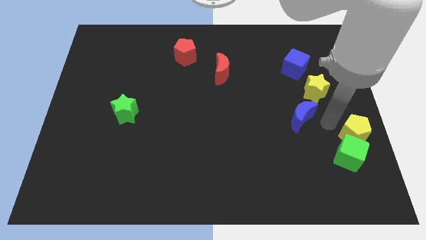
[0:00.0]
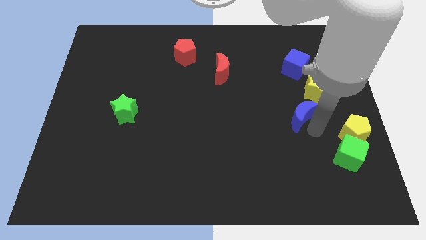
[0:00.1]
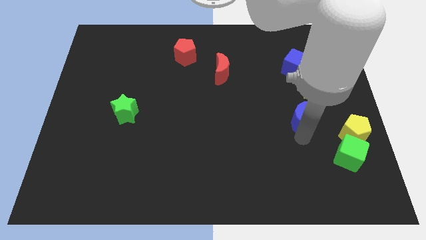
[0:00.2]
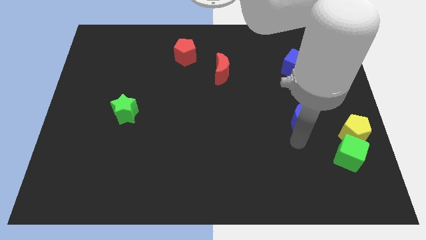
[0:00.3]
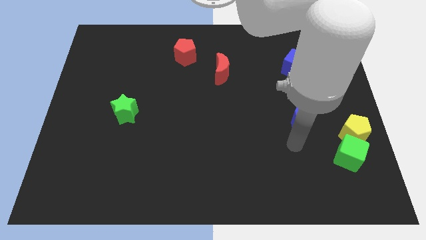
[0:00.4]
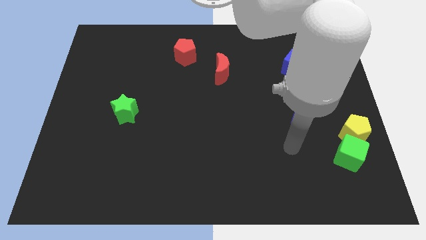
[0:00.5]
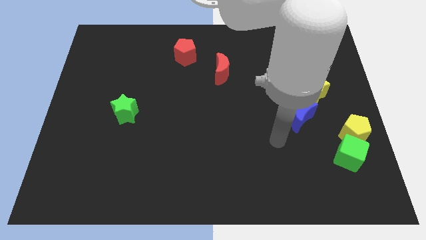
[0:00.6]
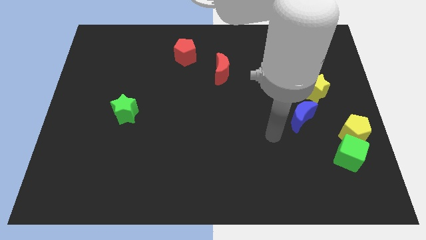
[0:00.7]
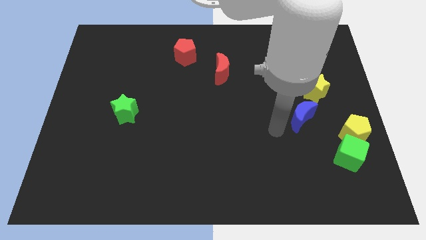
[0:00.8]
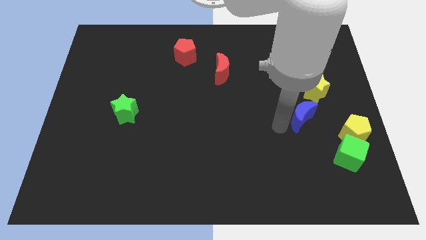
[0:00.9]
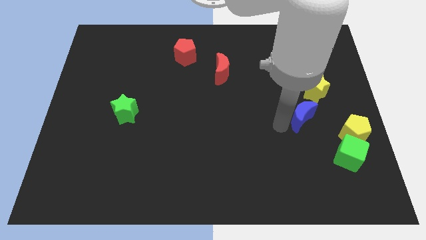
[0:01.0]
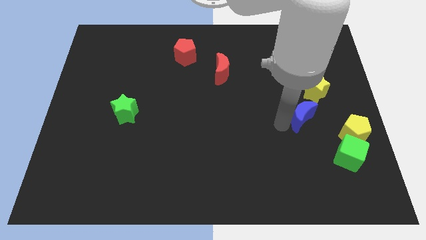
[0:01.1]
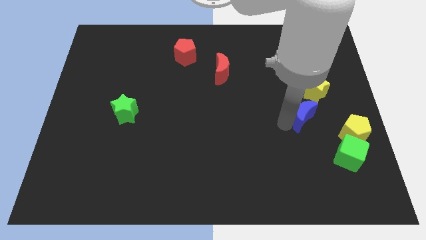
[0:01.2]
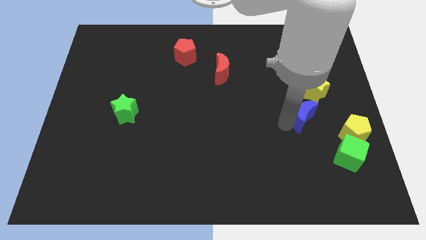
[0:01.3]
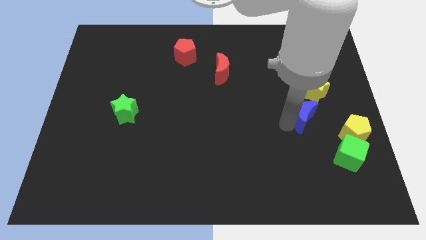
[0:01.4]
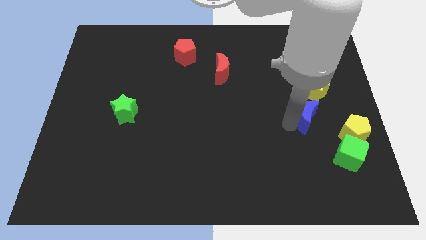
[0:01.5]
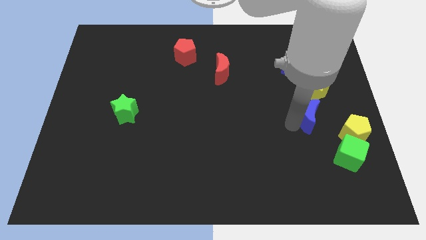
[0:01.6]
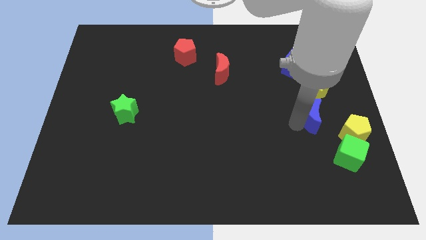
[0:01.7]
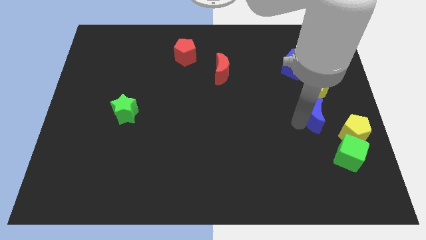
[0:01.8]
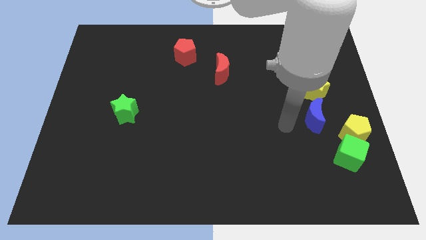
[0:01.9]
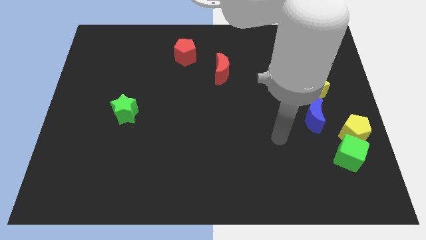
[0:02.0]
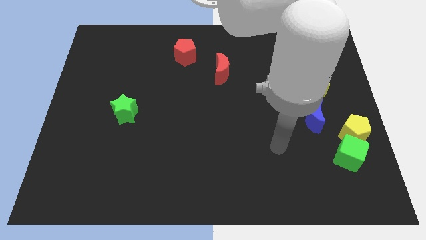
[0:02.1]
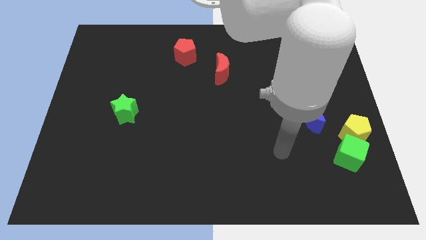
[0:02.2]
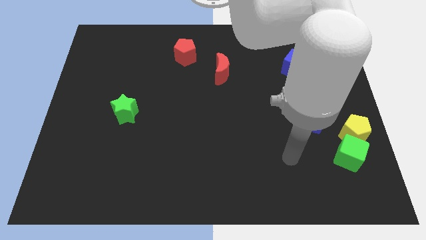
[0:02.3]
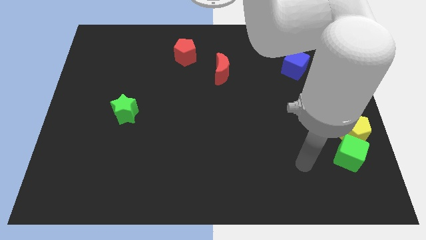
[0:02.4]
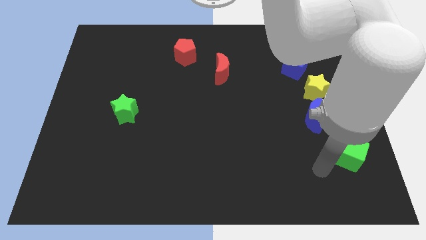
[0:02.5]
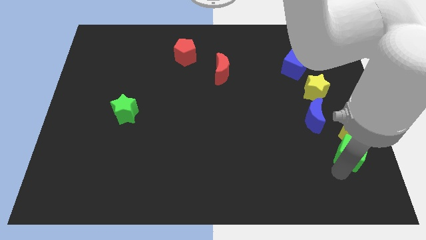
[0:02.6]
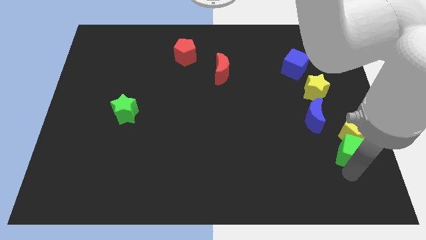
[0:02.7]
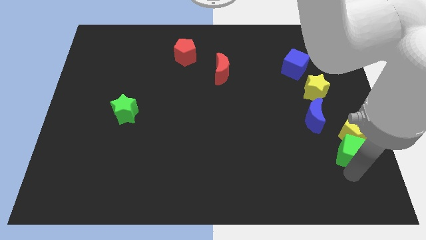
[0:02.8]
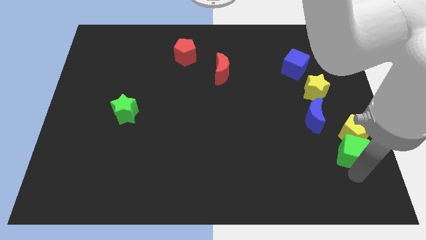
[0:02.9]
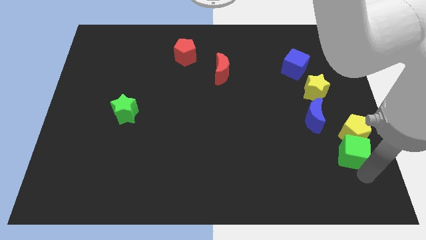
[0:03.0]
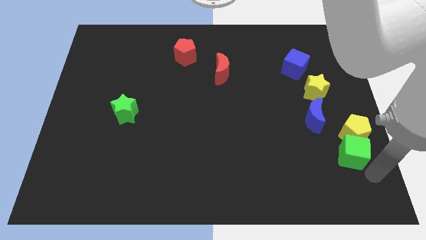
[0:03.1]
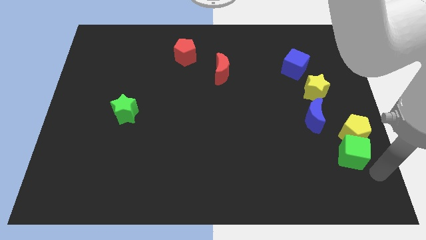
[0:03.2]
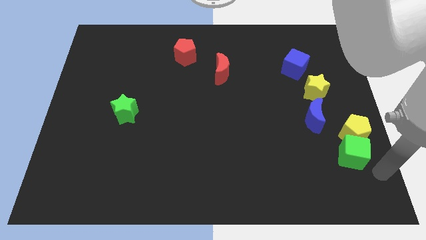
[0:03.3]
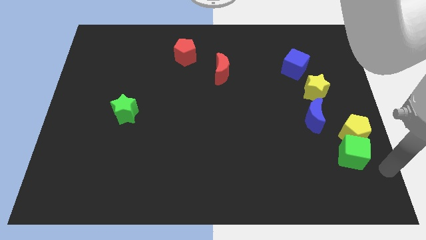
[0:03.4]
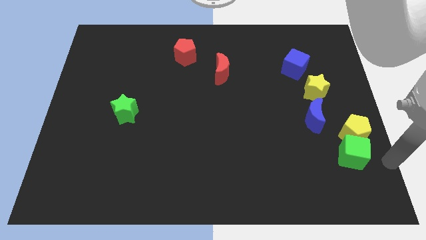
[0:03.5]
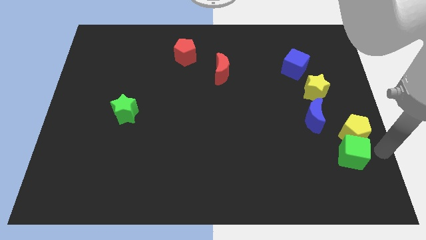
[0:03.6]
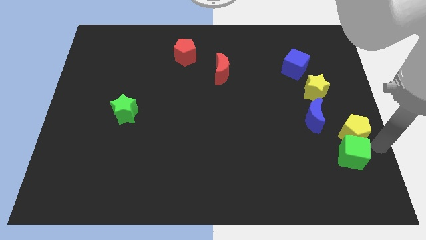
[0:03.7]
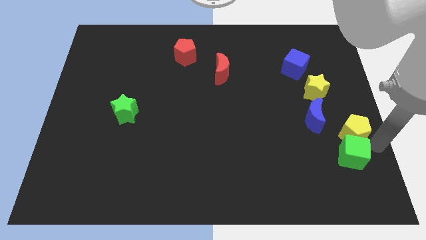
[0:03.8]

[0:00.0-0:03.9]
slightly push blue crescent

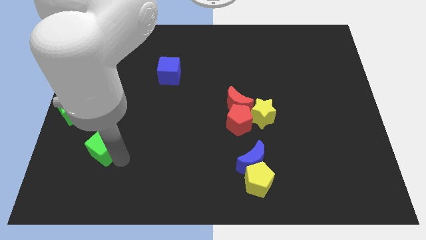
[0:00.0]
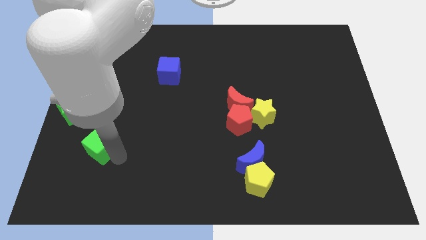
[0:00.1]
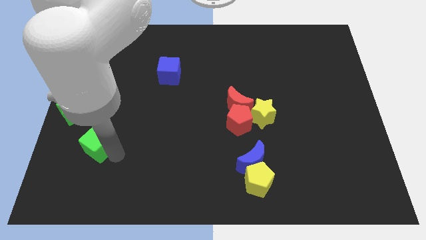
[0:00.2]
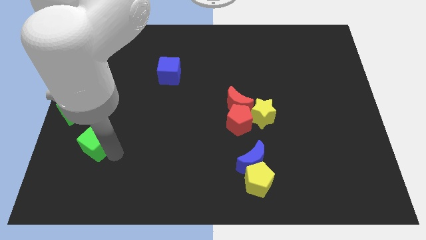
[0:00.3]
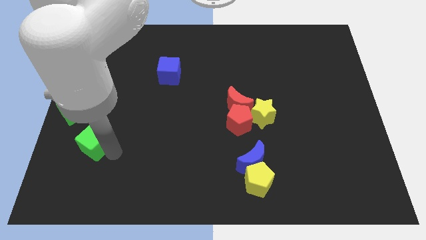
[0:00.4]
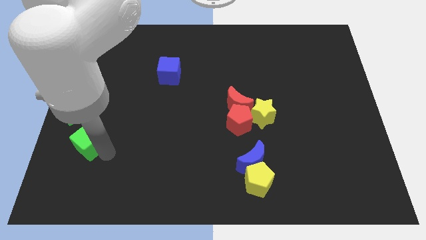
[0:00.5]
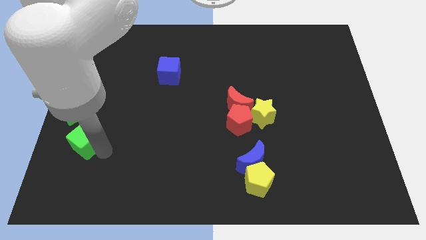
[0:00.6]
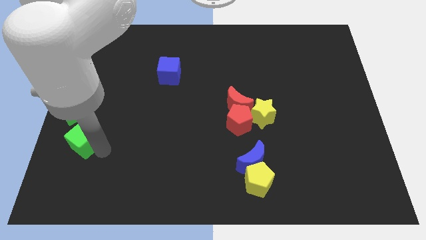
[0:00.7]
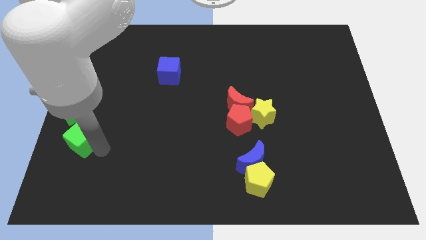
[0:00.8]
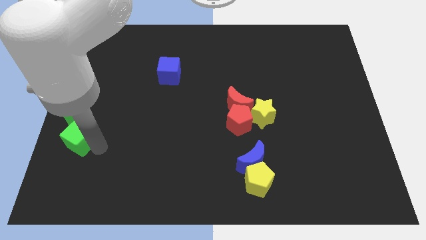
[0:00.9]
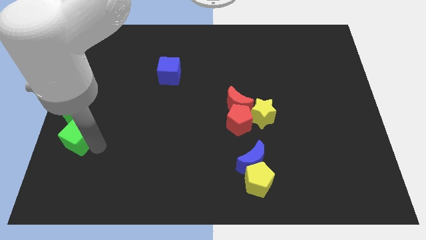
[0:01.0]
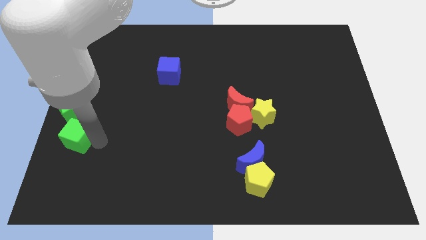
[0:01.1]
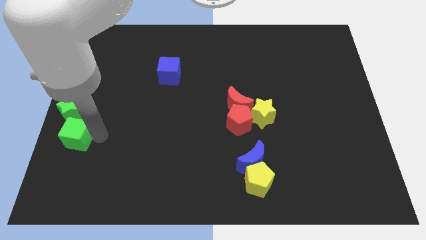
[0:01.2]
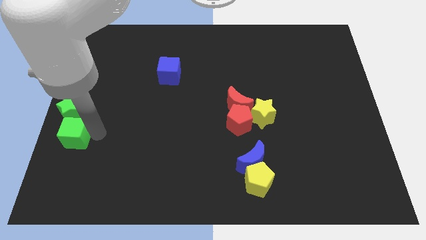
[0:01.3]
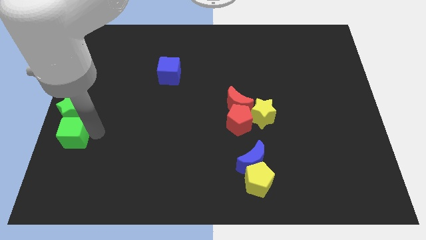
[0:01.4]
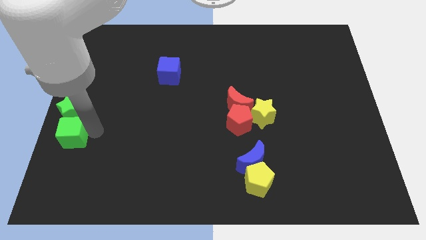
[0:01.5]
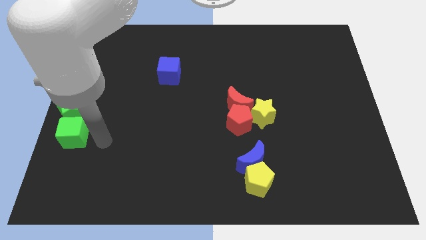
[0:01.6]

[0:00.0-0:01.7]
push the green cube to the bottom of the green star

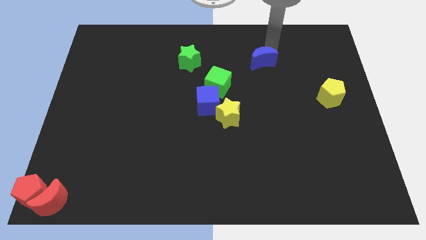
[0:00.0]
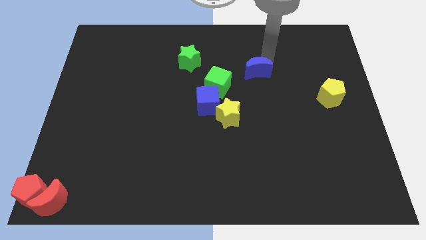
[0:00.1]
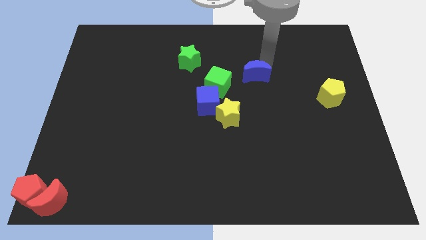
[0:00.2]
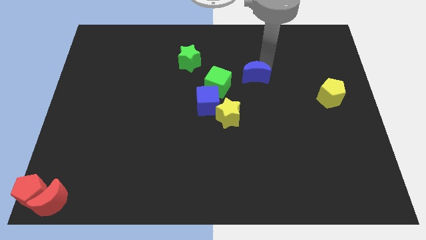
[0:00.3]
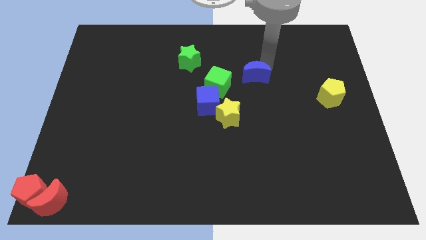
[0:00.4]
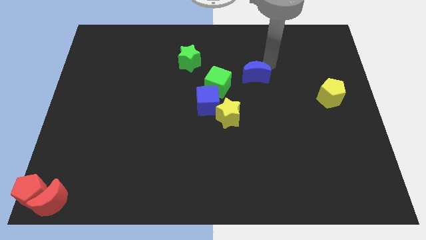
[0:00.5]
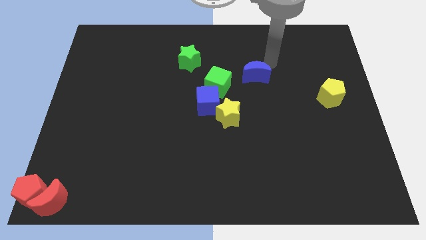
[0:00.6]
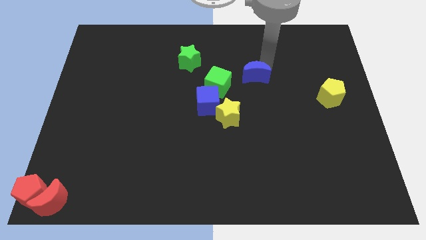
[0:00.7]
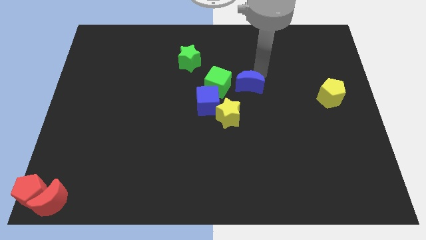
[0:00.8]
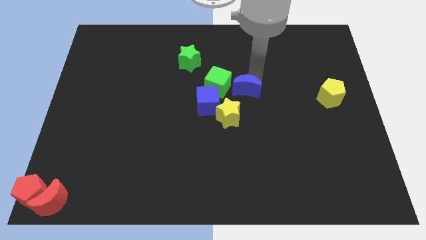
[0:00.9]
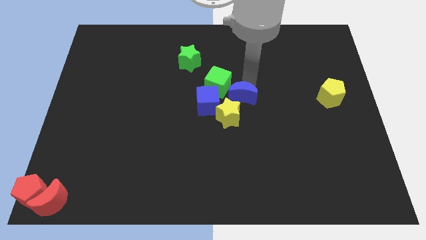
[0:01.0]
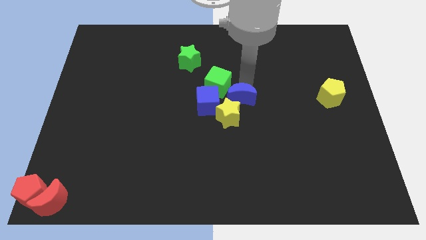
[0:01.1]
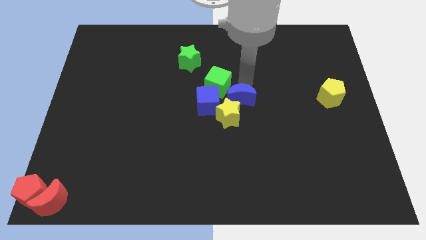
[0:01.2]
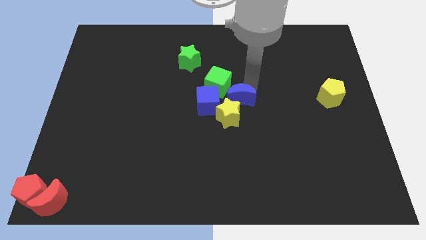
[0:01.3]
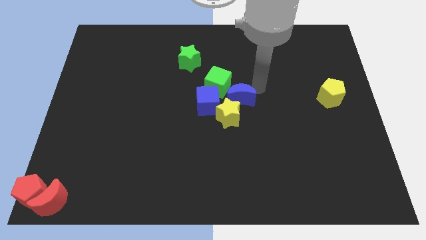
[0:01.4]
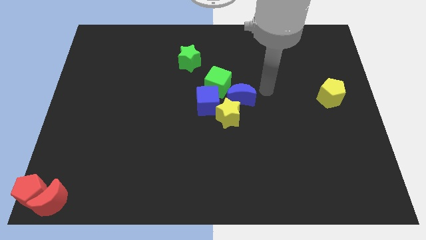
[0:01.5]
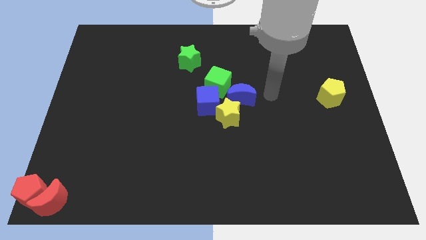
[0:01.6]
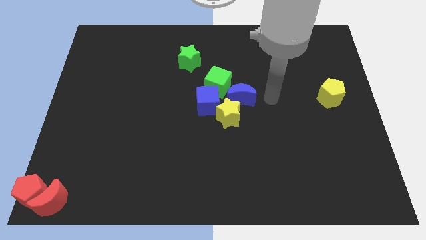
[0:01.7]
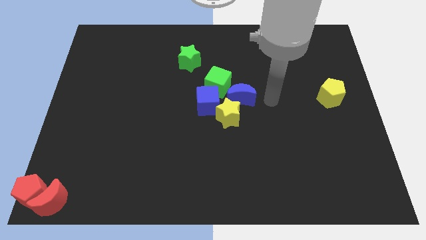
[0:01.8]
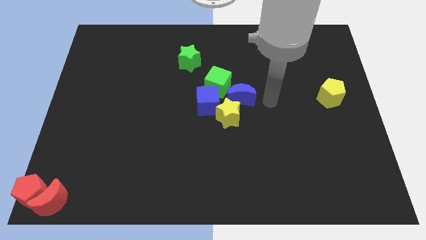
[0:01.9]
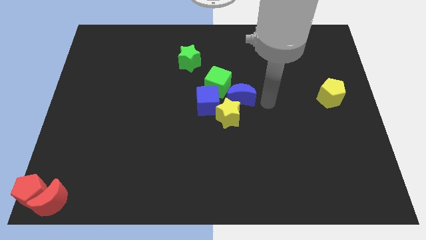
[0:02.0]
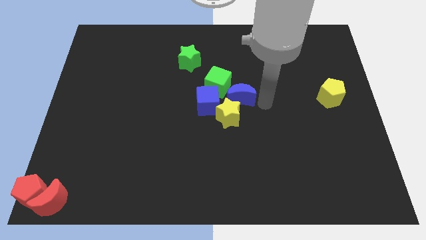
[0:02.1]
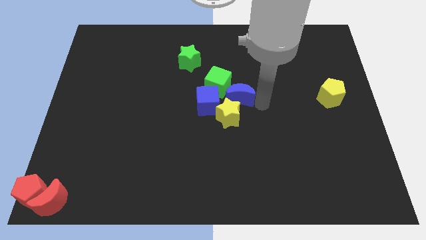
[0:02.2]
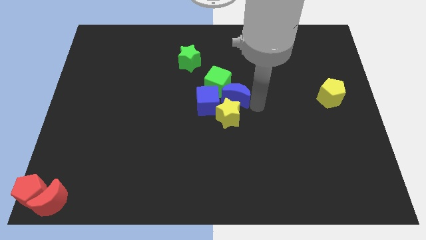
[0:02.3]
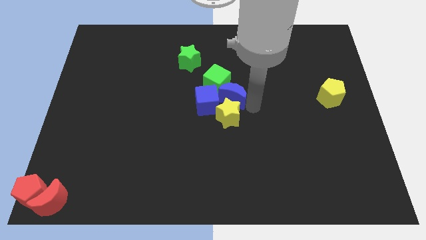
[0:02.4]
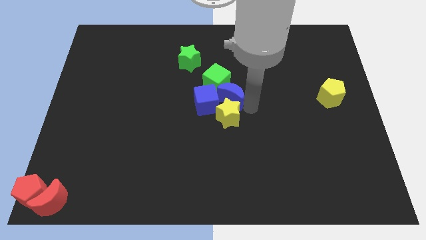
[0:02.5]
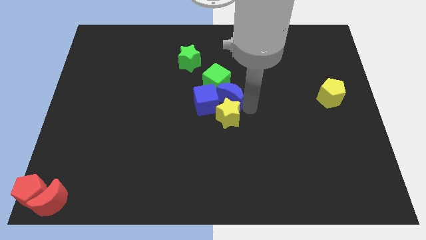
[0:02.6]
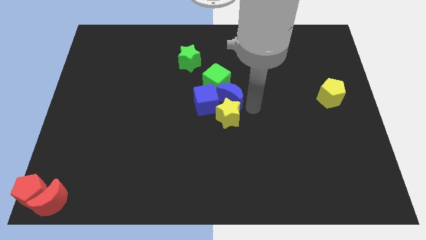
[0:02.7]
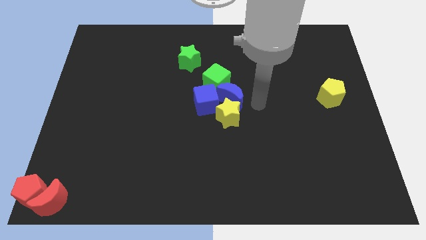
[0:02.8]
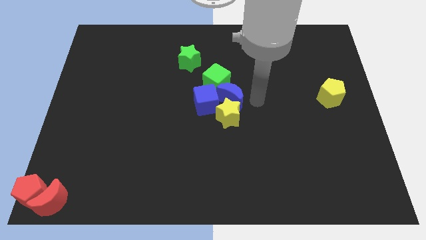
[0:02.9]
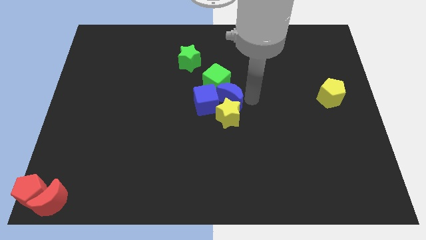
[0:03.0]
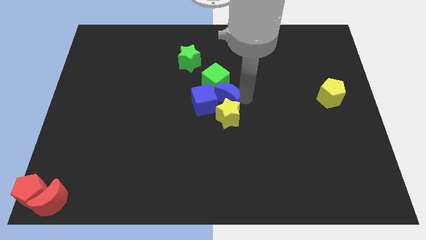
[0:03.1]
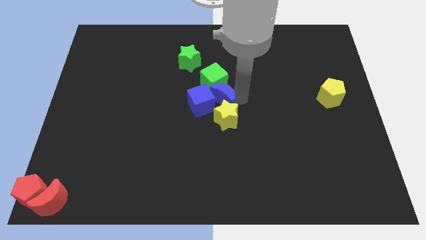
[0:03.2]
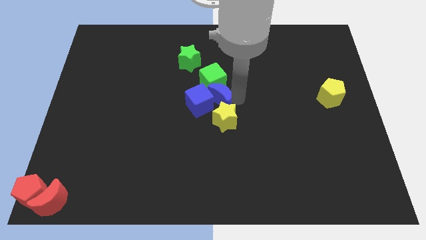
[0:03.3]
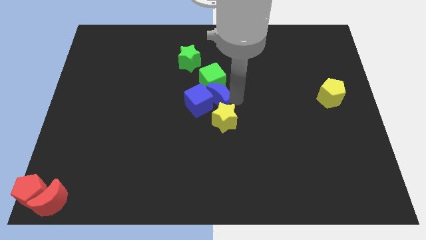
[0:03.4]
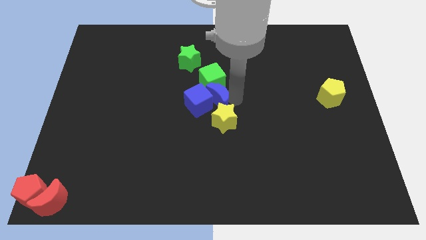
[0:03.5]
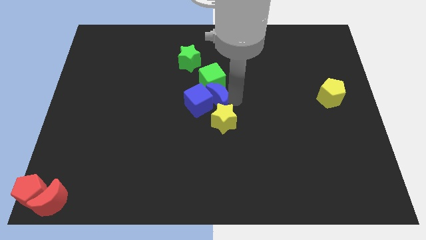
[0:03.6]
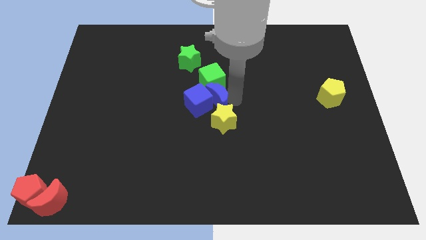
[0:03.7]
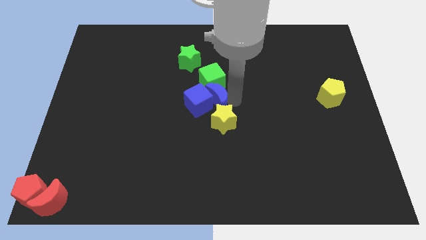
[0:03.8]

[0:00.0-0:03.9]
push the blue crescent into the blue cube
